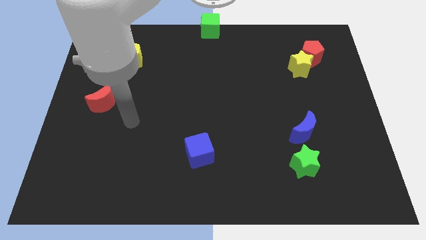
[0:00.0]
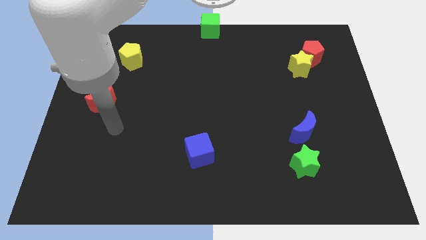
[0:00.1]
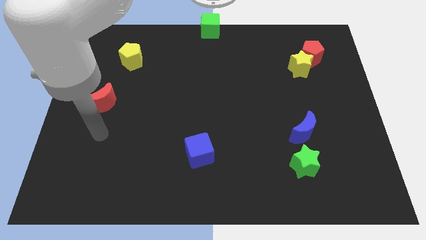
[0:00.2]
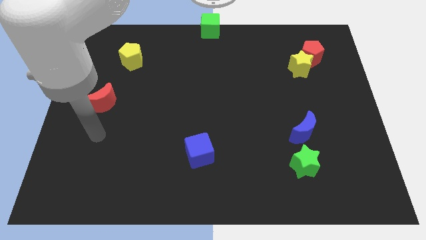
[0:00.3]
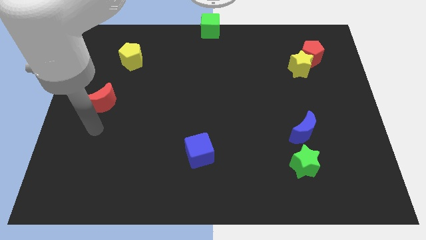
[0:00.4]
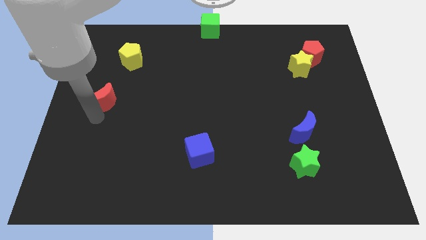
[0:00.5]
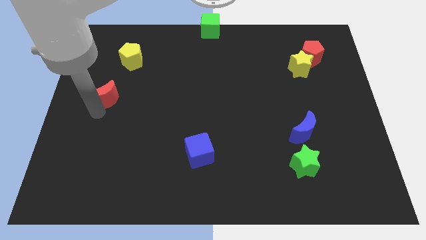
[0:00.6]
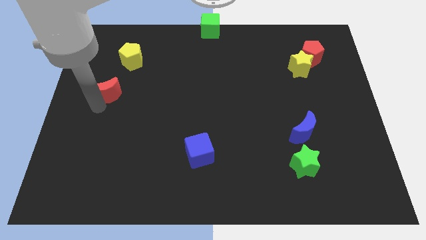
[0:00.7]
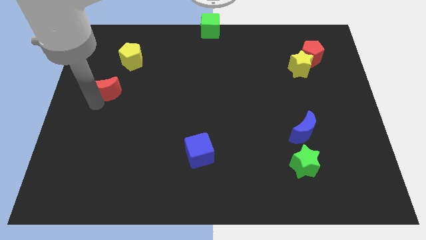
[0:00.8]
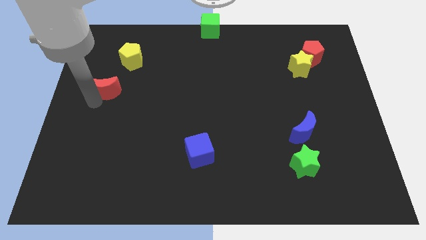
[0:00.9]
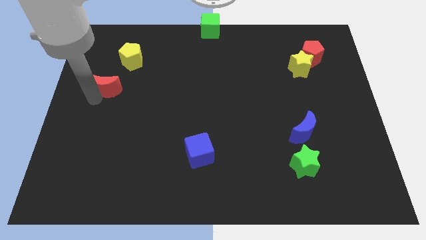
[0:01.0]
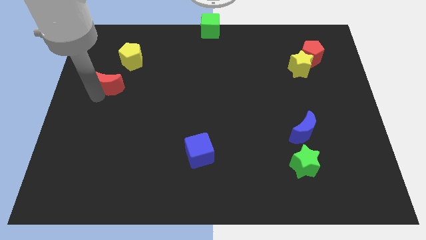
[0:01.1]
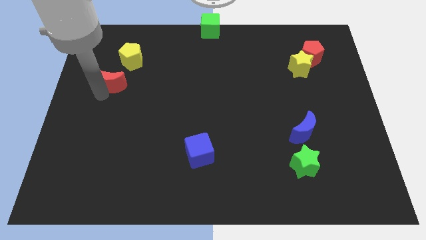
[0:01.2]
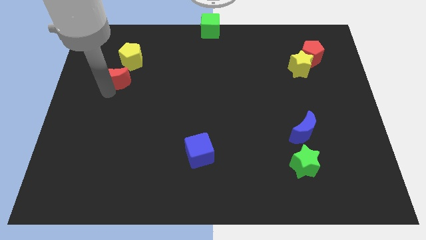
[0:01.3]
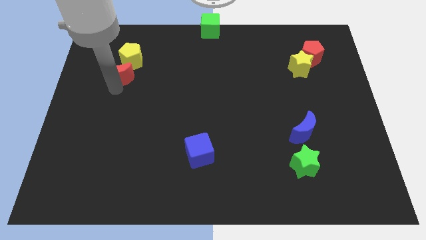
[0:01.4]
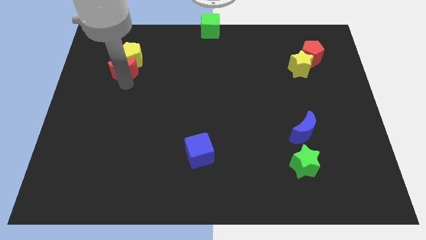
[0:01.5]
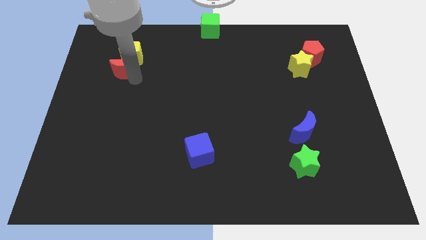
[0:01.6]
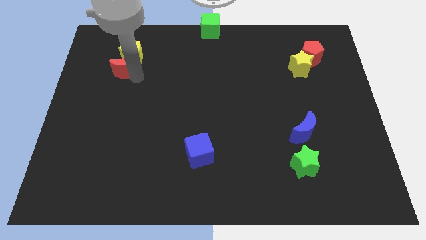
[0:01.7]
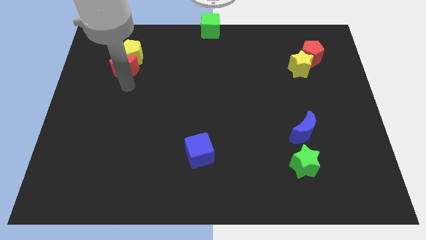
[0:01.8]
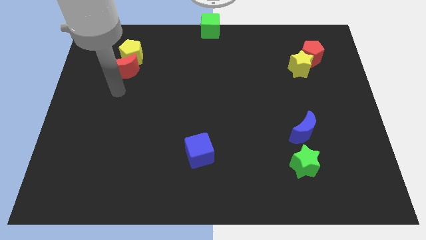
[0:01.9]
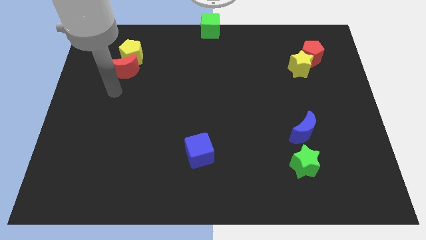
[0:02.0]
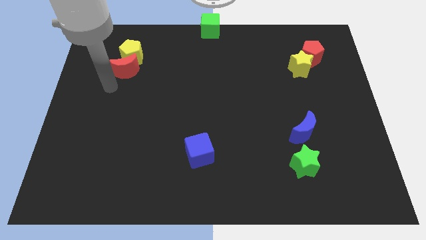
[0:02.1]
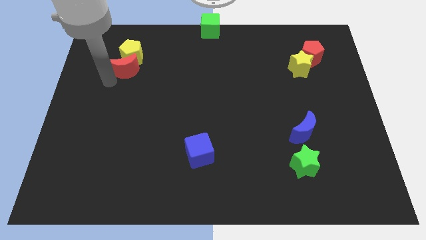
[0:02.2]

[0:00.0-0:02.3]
push the red moon into yellow pentagon to the bottom

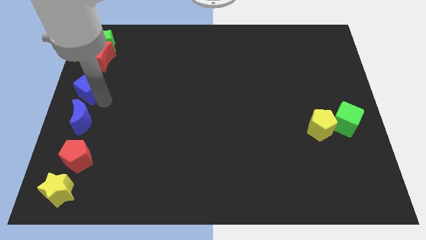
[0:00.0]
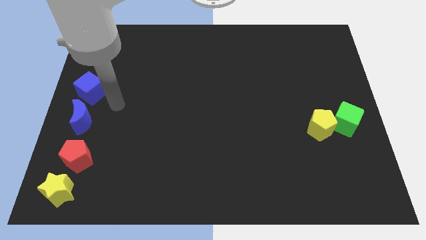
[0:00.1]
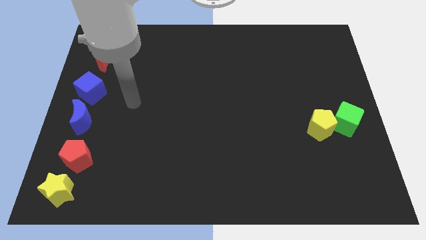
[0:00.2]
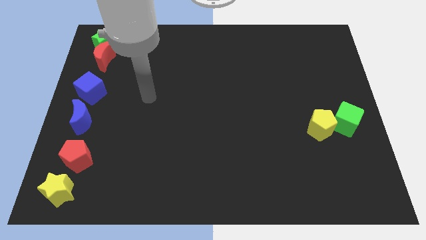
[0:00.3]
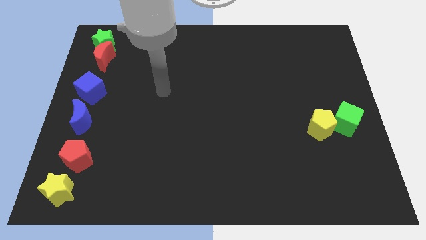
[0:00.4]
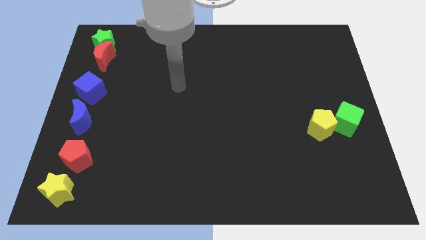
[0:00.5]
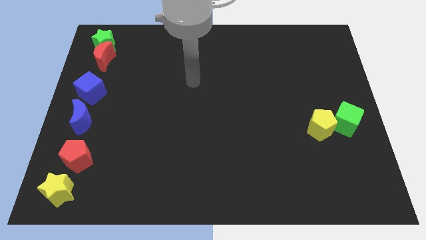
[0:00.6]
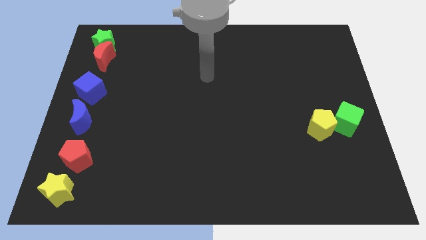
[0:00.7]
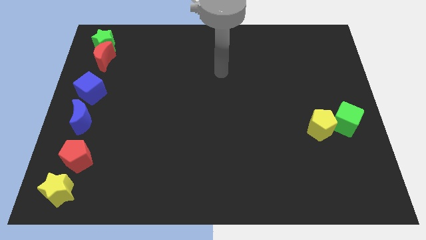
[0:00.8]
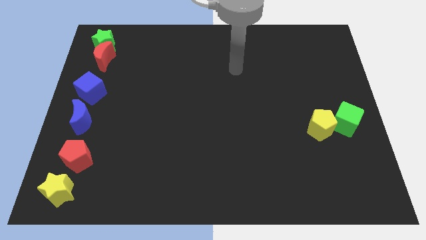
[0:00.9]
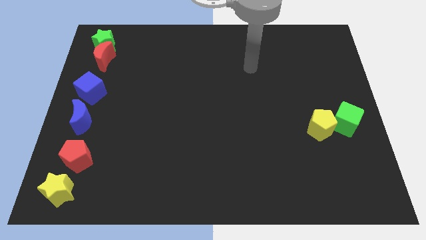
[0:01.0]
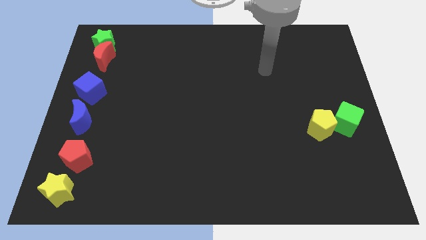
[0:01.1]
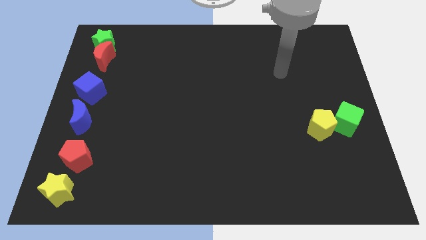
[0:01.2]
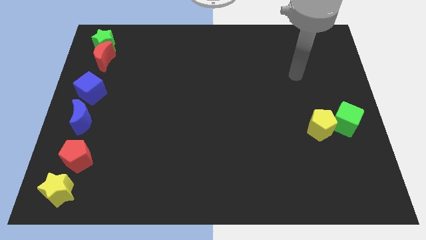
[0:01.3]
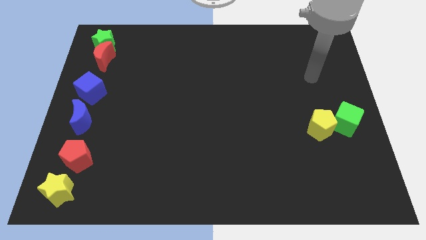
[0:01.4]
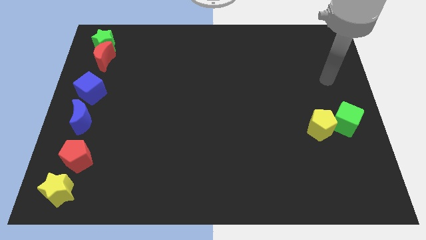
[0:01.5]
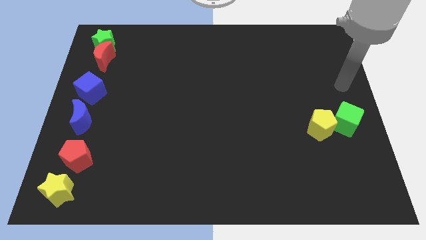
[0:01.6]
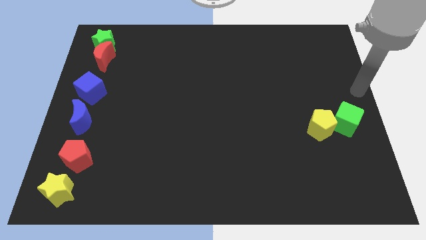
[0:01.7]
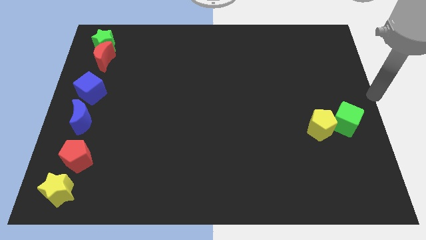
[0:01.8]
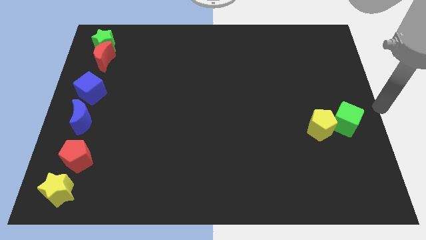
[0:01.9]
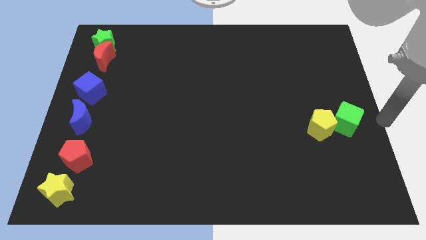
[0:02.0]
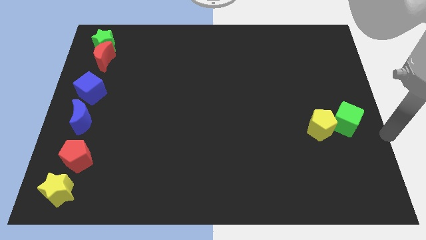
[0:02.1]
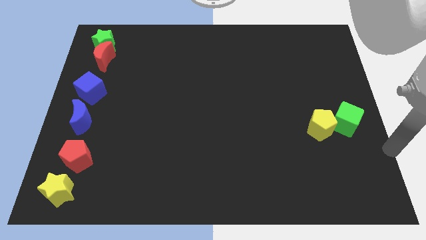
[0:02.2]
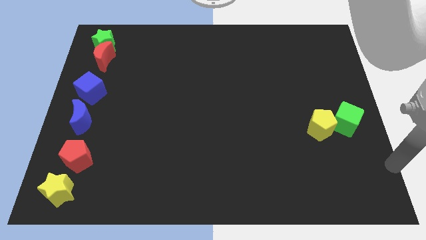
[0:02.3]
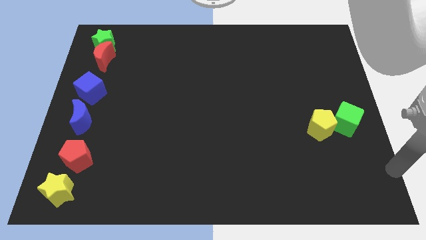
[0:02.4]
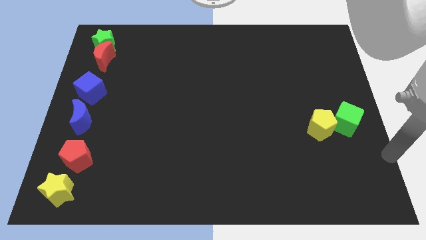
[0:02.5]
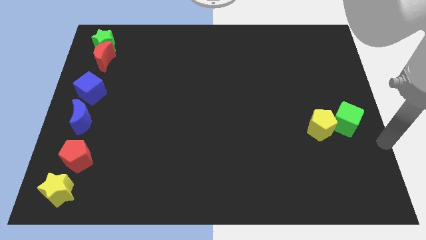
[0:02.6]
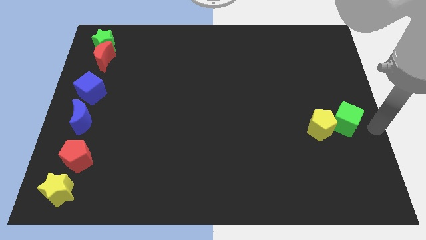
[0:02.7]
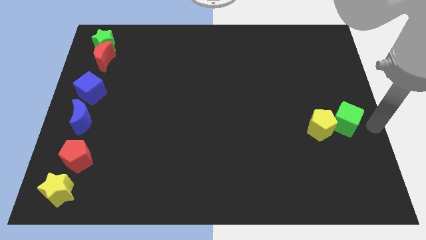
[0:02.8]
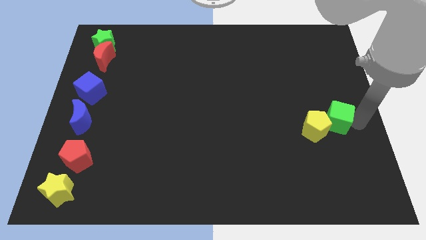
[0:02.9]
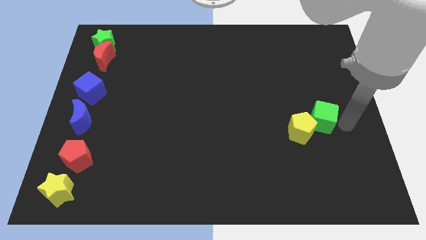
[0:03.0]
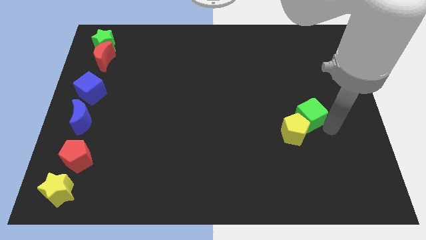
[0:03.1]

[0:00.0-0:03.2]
move the green cube and yellow pentagon slightly to the left side of the board

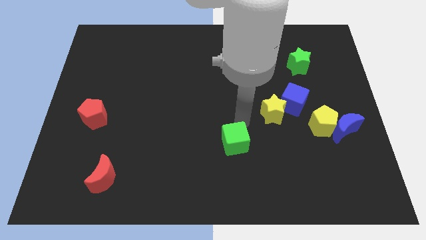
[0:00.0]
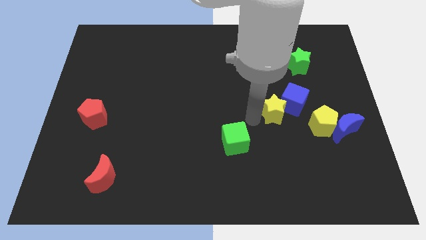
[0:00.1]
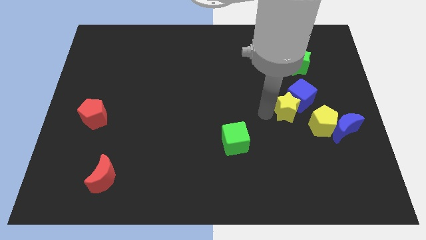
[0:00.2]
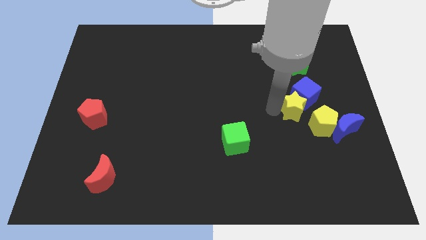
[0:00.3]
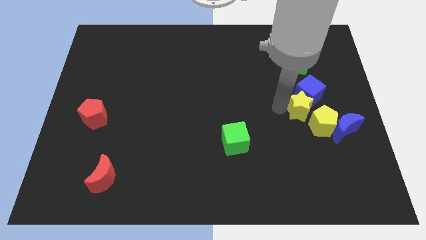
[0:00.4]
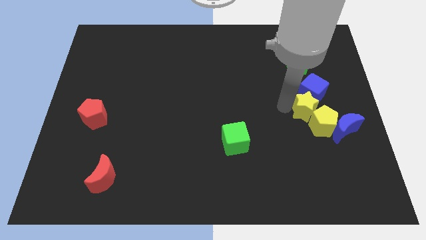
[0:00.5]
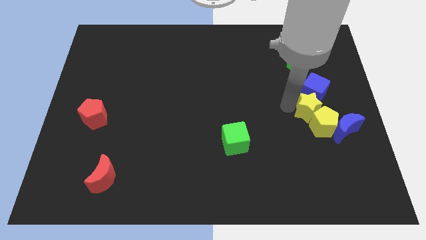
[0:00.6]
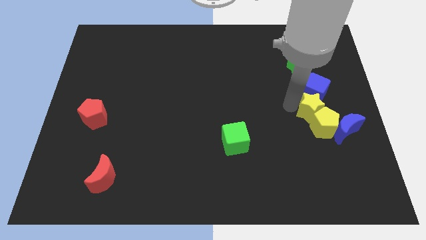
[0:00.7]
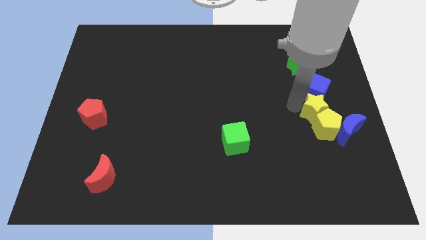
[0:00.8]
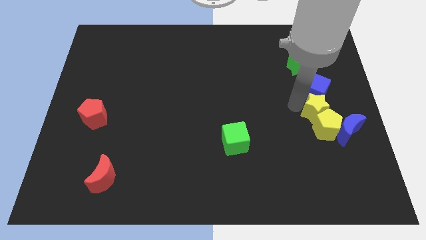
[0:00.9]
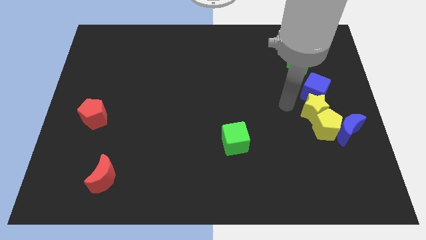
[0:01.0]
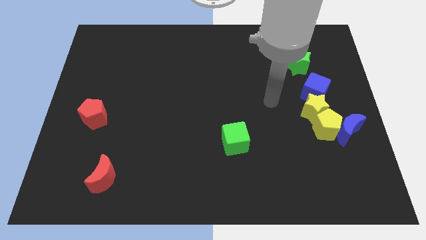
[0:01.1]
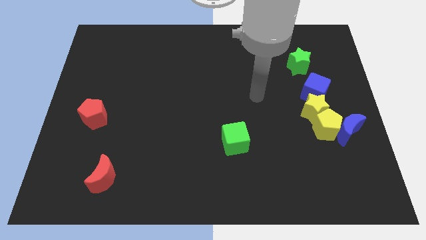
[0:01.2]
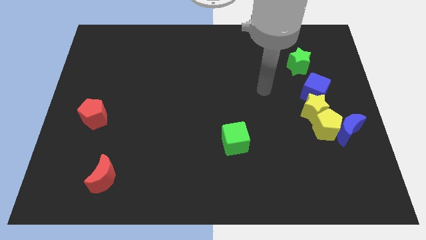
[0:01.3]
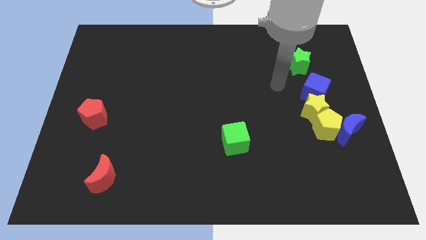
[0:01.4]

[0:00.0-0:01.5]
place the yellow star to the top of yellow pentagon

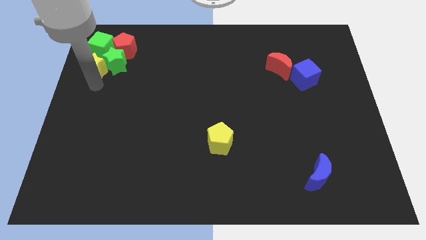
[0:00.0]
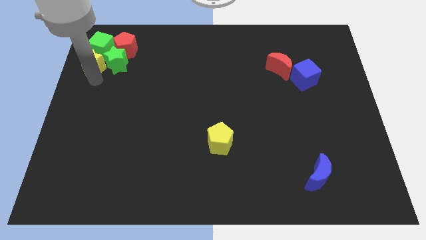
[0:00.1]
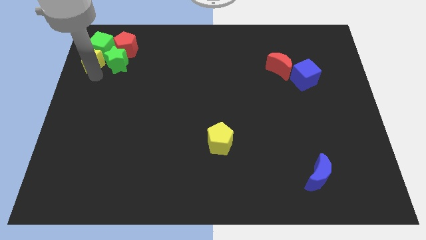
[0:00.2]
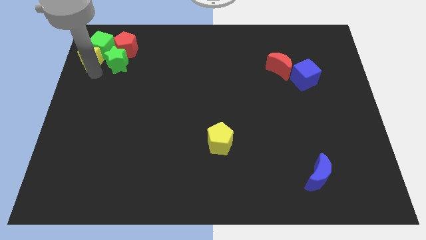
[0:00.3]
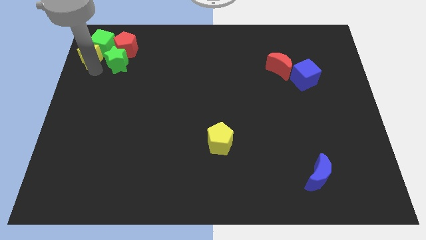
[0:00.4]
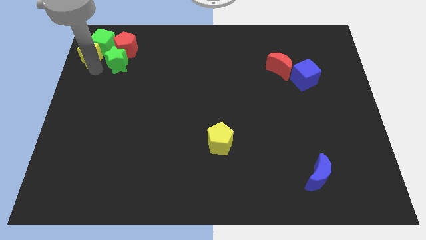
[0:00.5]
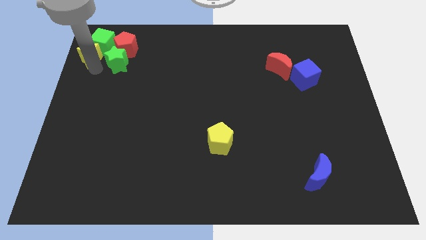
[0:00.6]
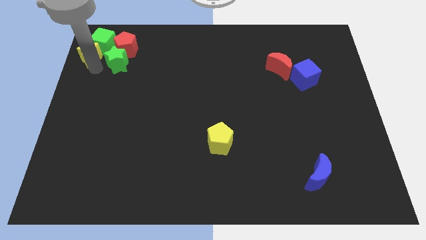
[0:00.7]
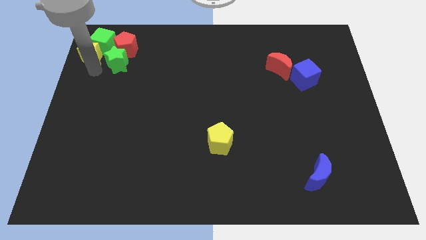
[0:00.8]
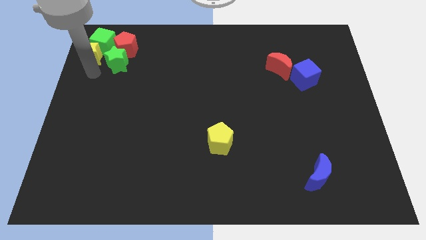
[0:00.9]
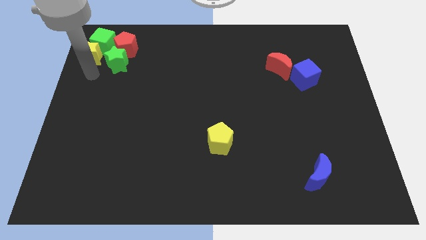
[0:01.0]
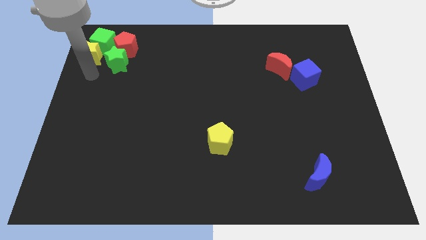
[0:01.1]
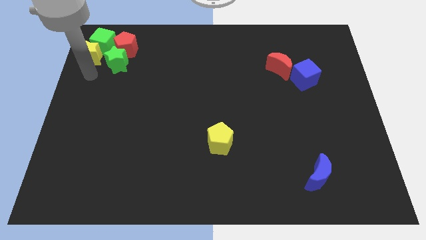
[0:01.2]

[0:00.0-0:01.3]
push the yellow star into green cube

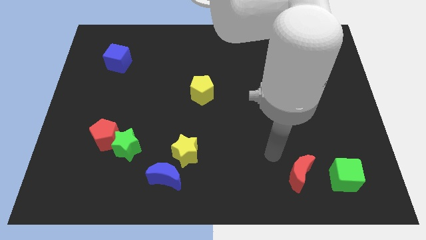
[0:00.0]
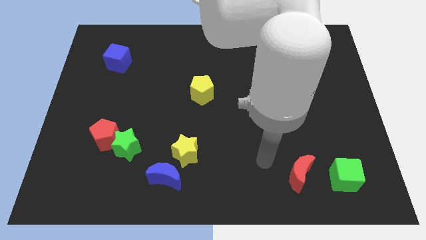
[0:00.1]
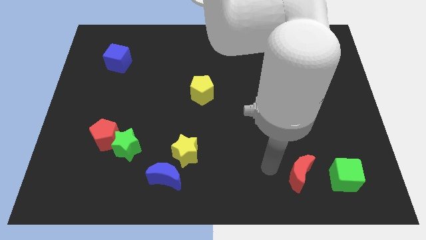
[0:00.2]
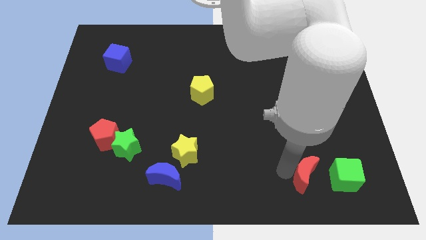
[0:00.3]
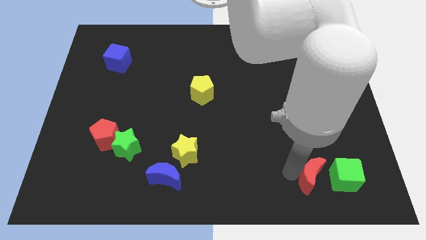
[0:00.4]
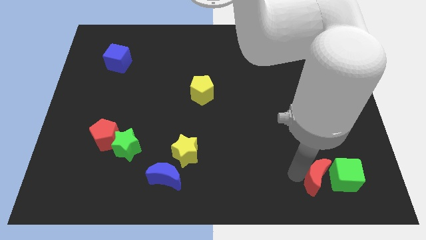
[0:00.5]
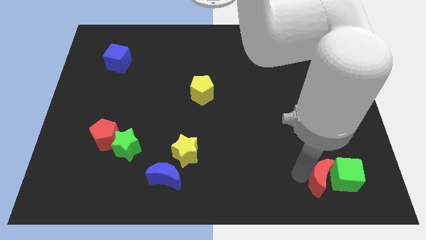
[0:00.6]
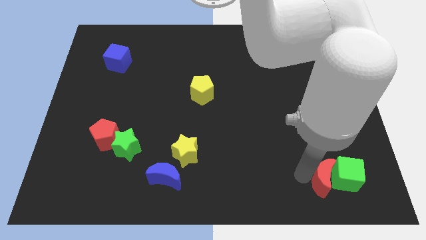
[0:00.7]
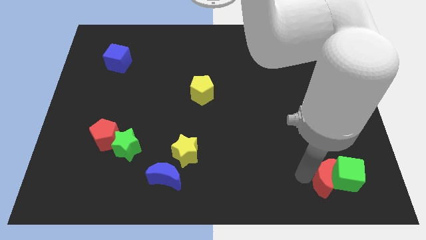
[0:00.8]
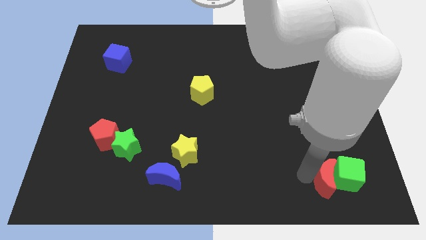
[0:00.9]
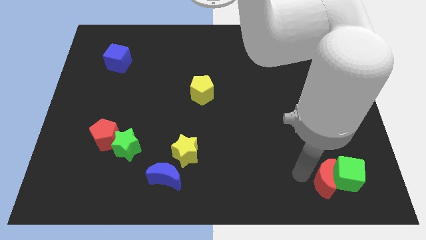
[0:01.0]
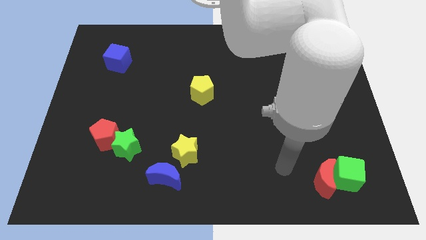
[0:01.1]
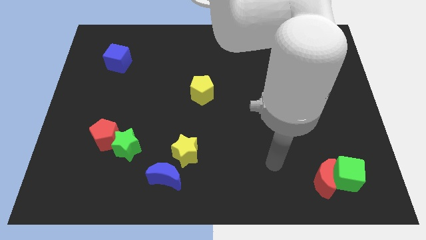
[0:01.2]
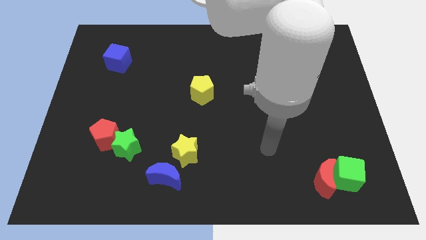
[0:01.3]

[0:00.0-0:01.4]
push the red crescent into the green cube
